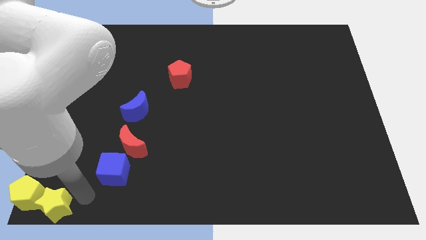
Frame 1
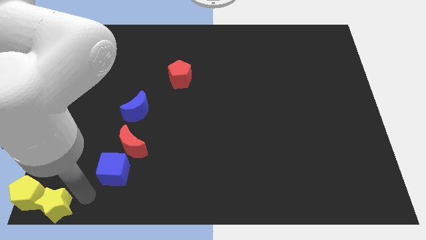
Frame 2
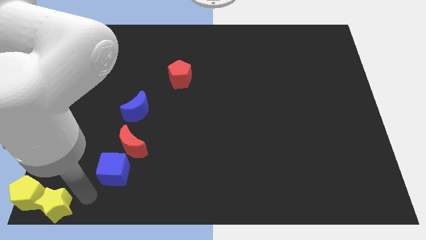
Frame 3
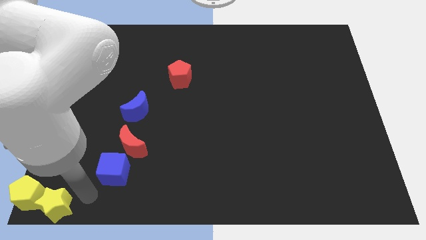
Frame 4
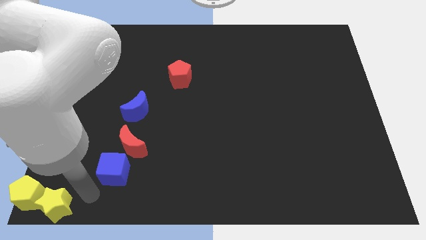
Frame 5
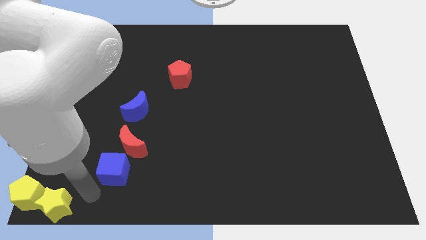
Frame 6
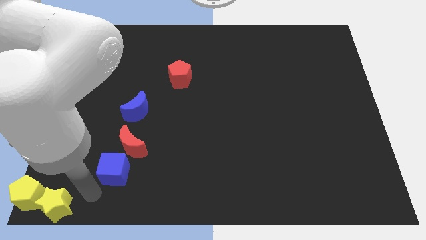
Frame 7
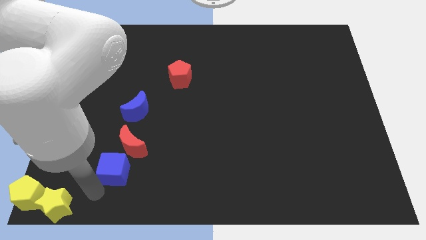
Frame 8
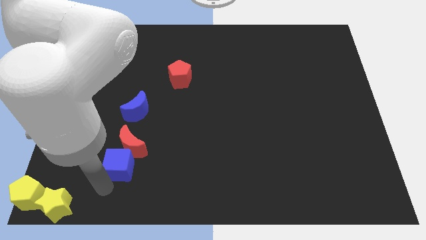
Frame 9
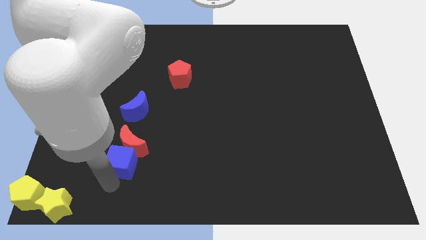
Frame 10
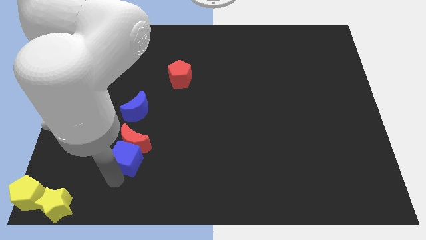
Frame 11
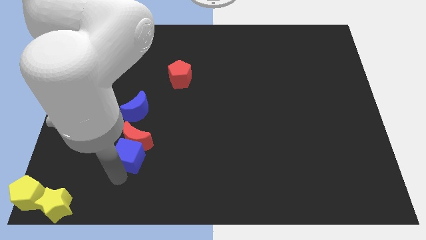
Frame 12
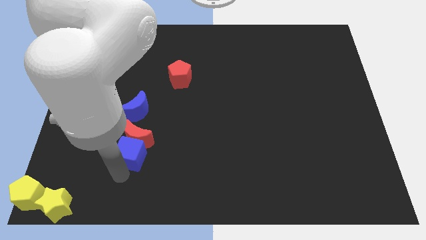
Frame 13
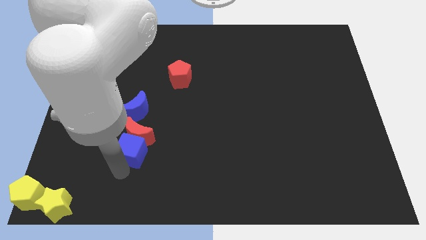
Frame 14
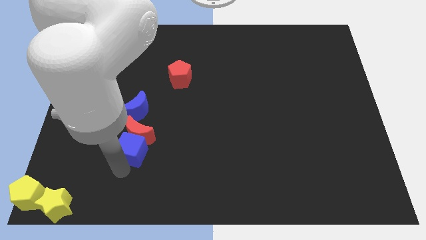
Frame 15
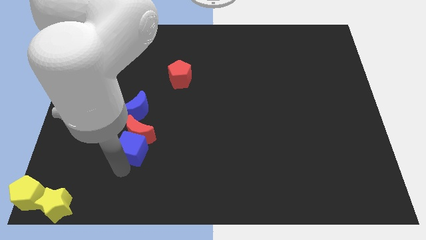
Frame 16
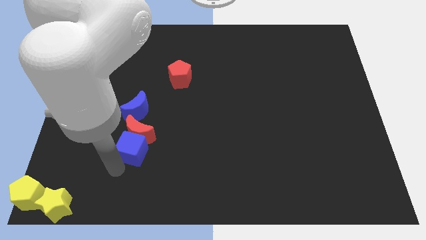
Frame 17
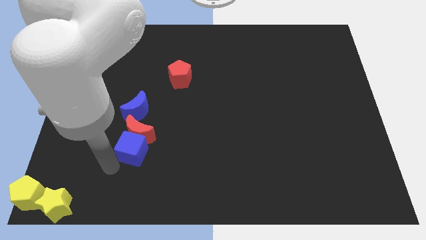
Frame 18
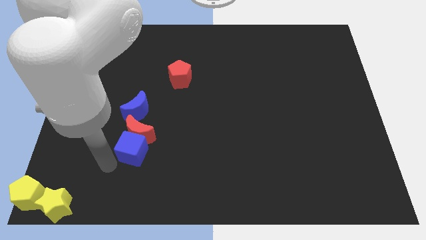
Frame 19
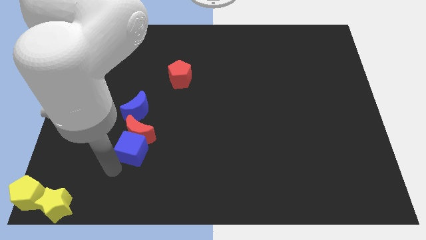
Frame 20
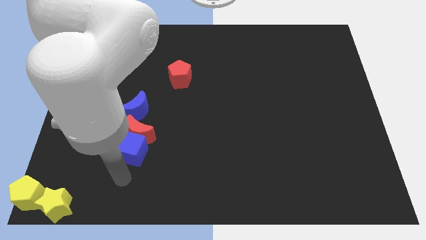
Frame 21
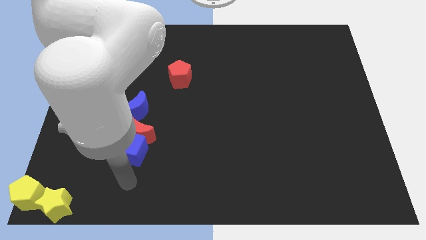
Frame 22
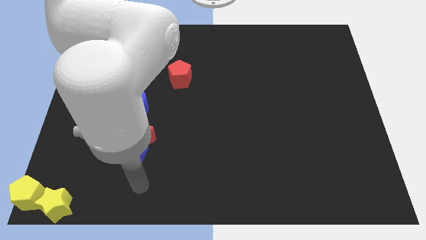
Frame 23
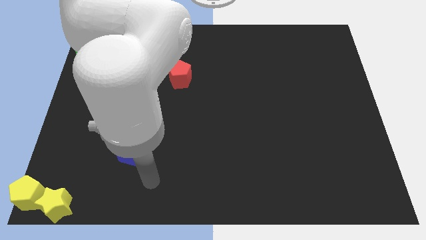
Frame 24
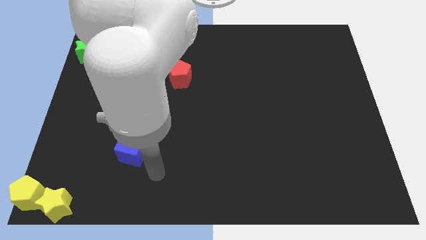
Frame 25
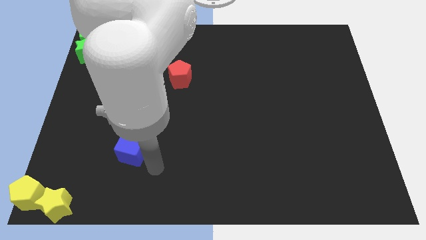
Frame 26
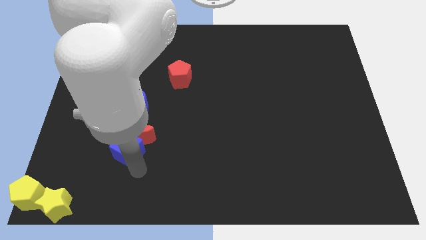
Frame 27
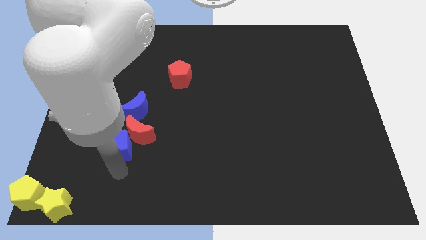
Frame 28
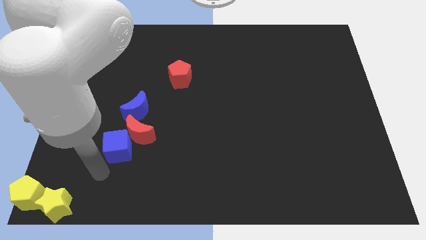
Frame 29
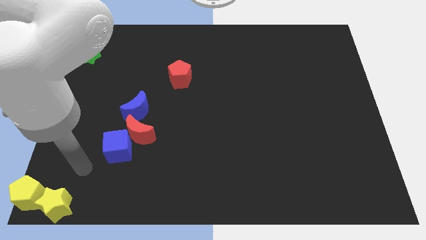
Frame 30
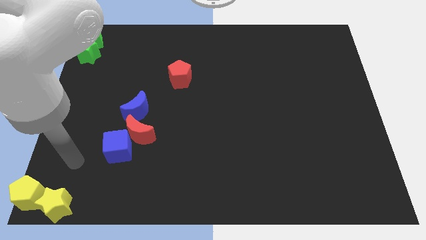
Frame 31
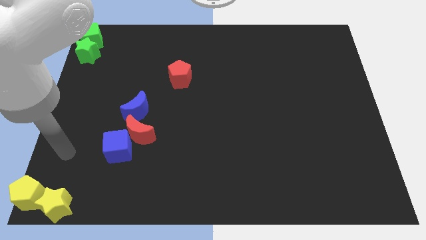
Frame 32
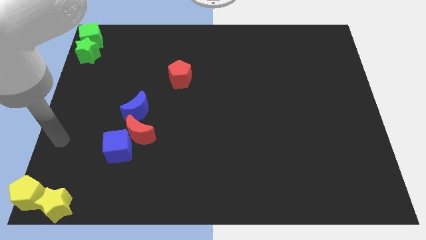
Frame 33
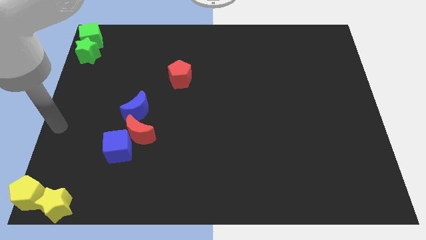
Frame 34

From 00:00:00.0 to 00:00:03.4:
move the blue cube into the red crescent

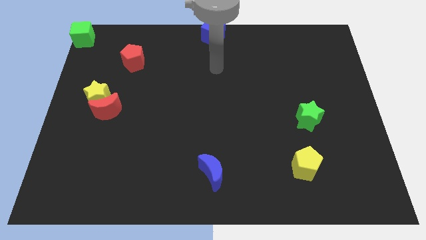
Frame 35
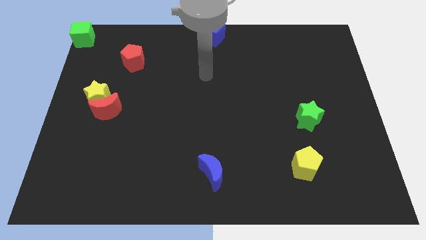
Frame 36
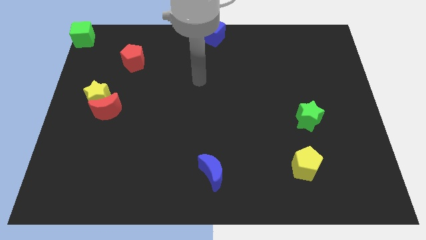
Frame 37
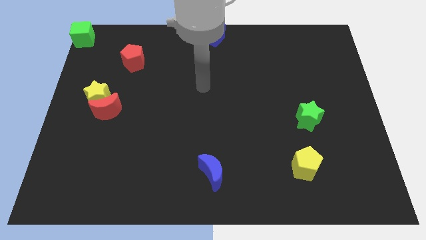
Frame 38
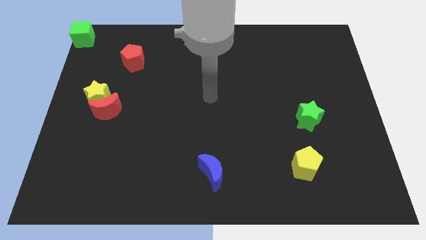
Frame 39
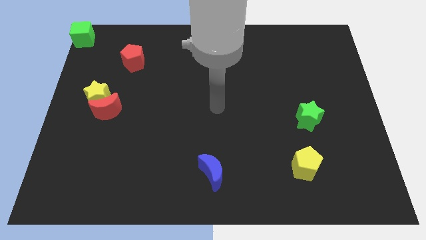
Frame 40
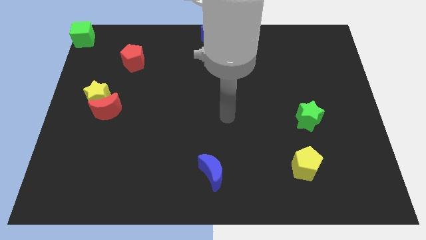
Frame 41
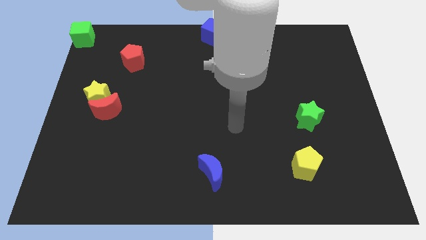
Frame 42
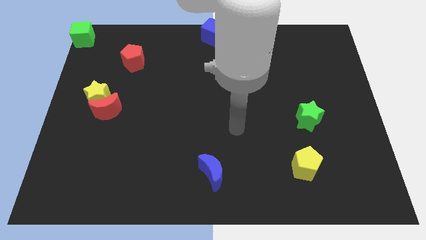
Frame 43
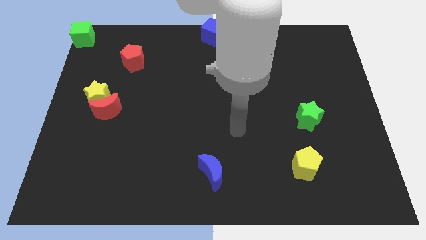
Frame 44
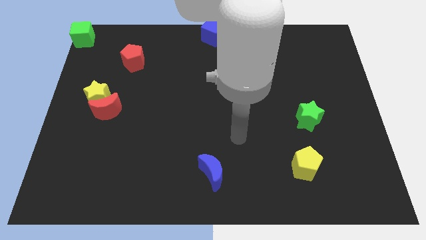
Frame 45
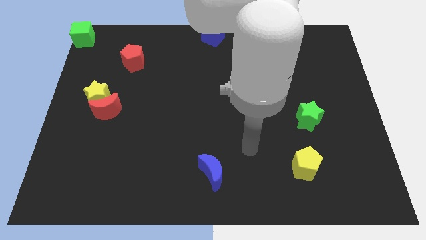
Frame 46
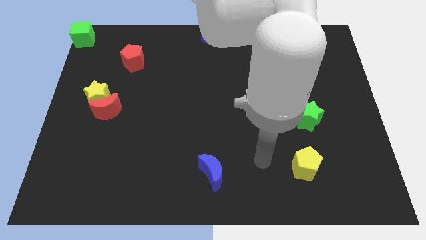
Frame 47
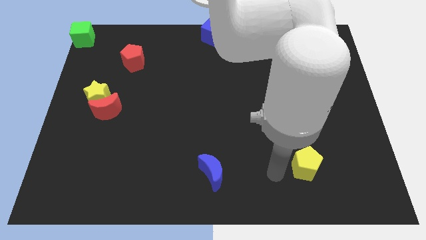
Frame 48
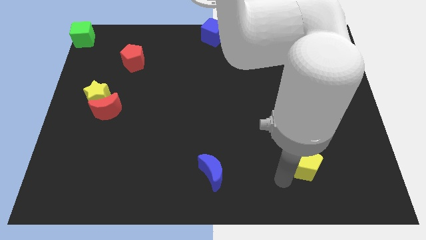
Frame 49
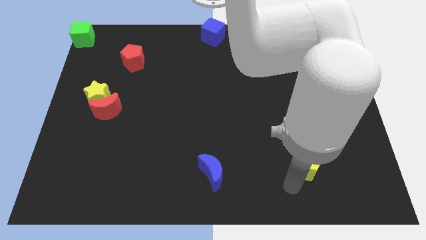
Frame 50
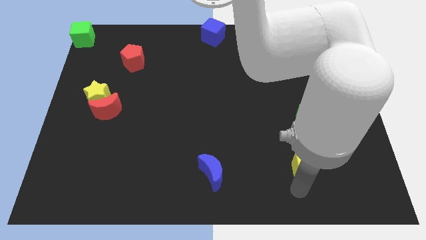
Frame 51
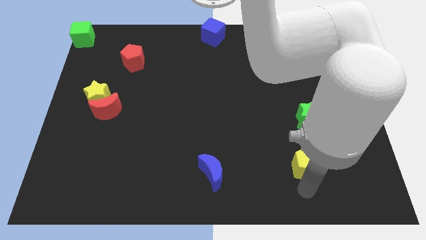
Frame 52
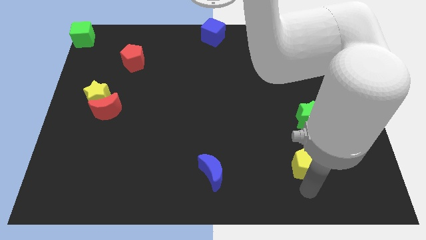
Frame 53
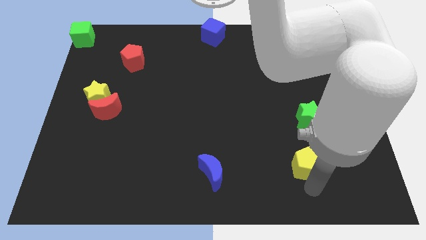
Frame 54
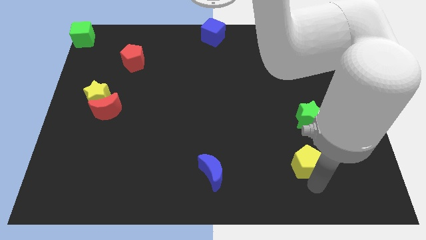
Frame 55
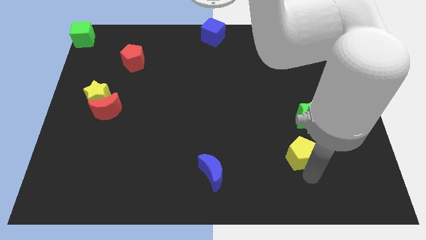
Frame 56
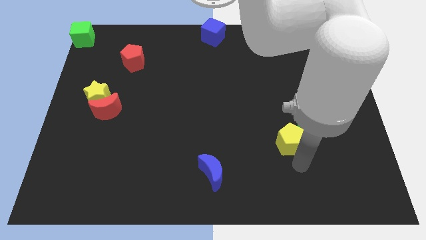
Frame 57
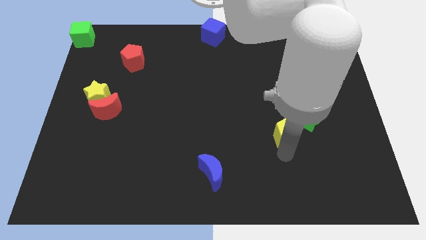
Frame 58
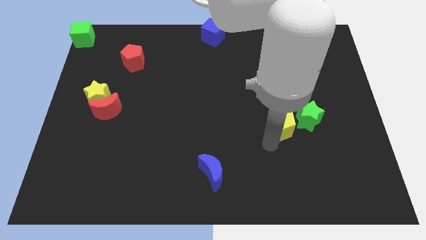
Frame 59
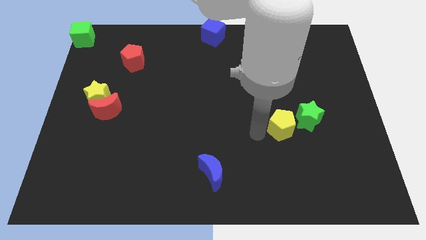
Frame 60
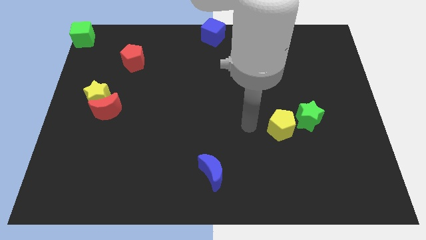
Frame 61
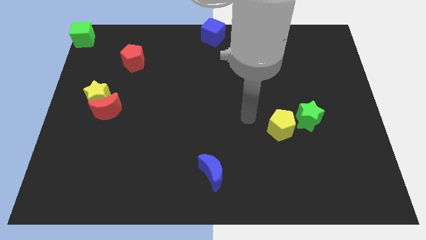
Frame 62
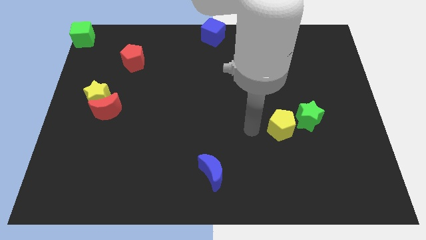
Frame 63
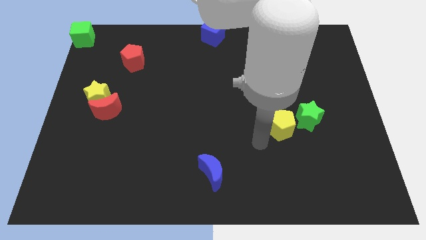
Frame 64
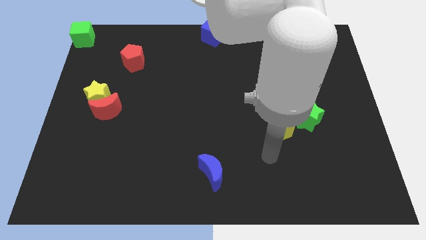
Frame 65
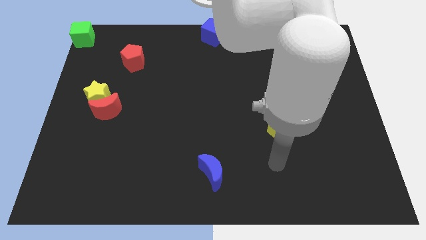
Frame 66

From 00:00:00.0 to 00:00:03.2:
move the yellow pentagon slightly to the top

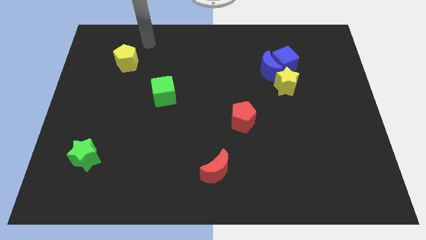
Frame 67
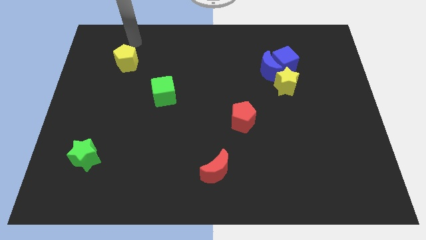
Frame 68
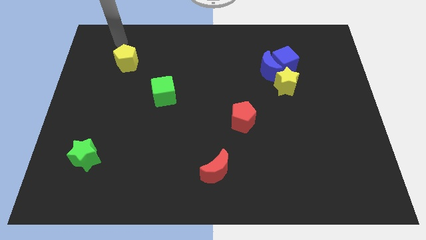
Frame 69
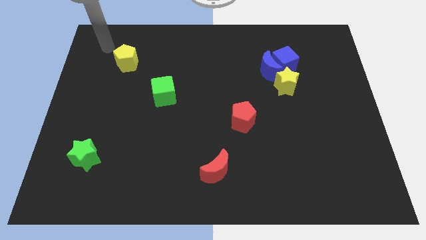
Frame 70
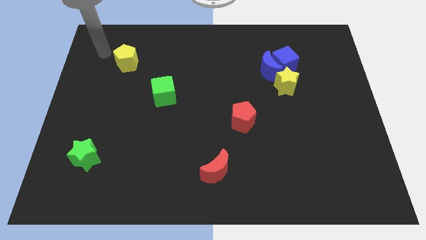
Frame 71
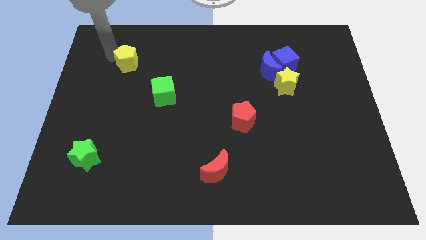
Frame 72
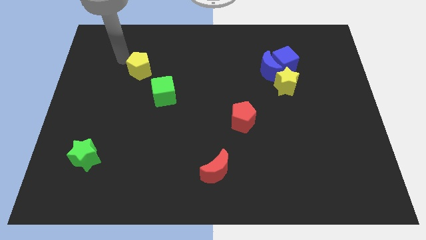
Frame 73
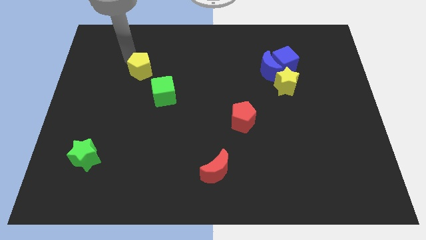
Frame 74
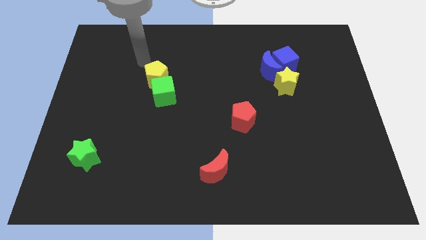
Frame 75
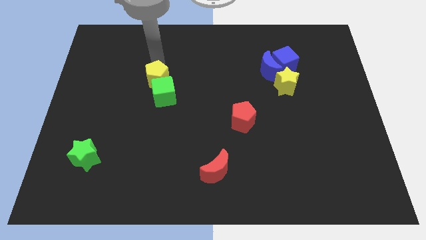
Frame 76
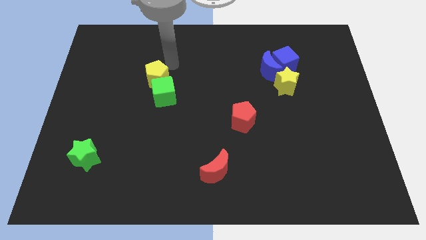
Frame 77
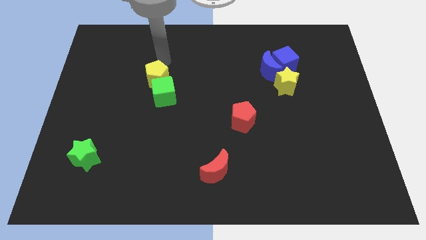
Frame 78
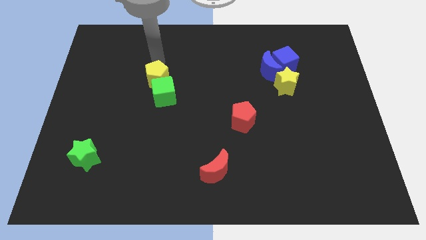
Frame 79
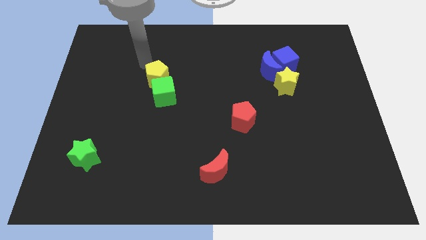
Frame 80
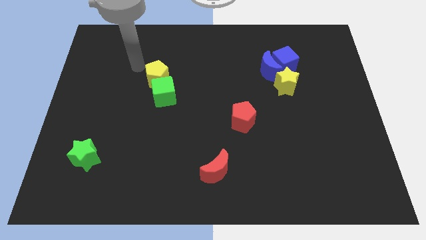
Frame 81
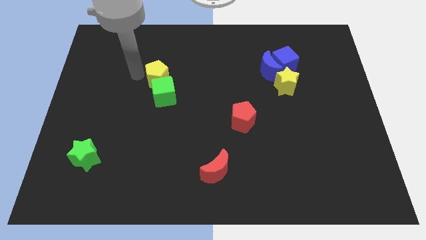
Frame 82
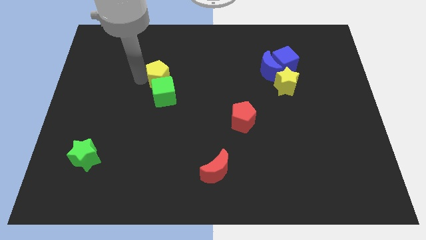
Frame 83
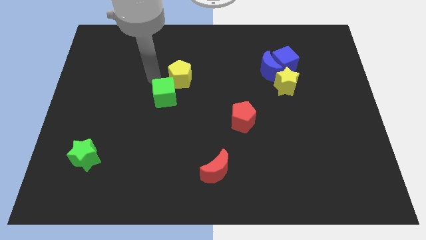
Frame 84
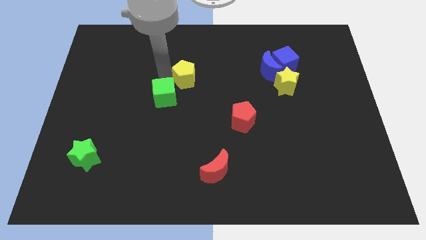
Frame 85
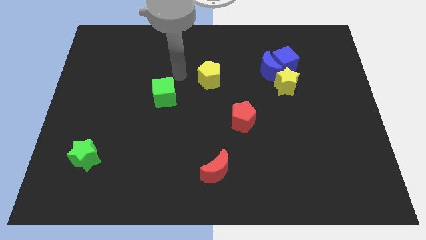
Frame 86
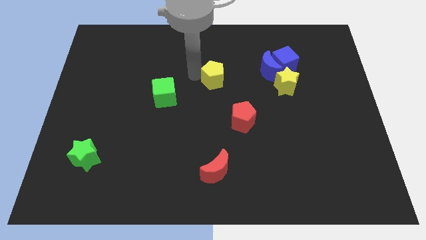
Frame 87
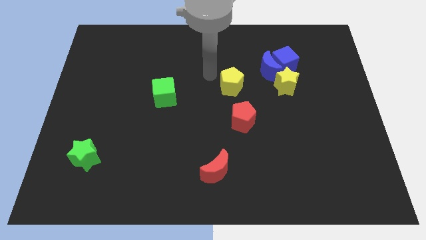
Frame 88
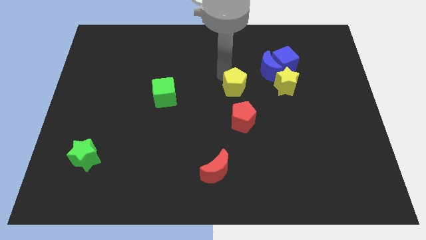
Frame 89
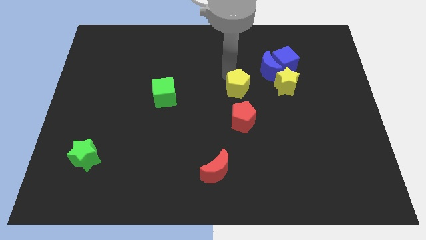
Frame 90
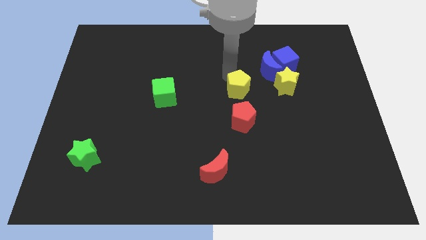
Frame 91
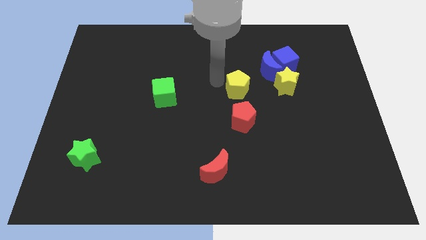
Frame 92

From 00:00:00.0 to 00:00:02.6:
move the yellow pentagon above the red pentagon
